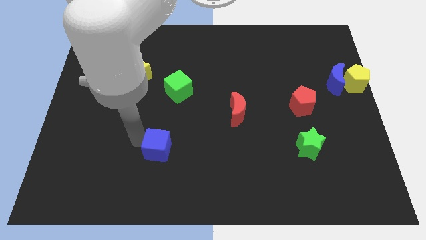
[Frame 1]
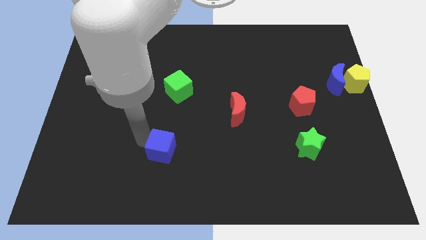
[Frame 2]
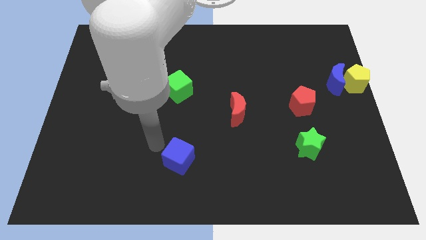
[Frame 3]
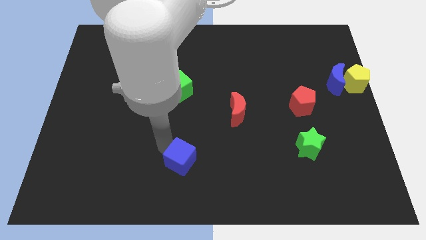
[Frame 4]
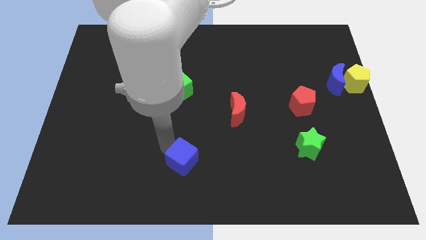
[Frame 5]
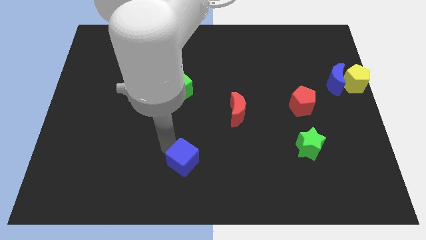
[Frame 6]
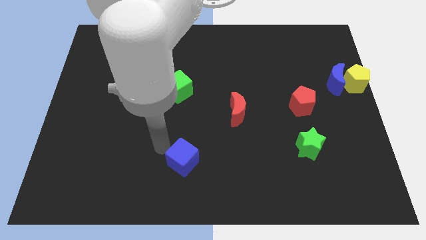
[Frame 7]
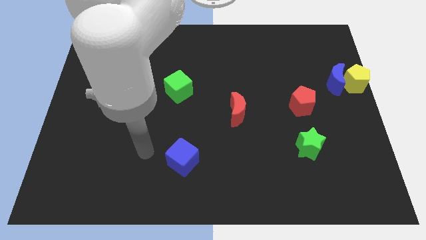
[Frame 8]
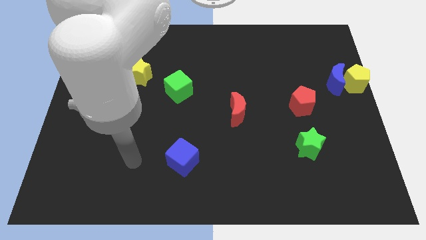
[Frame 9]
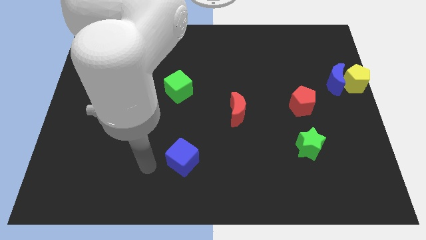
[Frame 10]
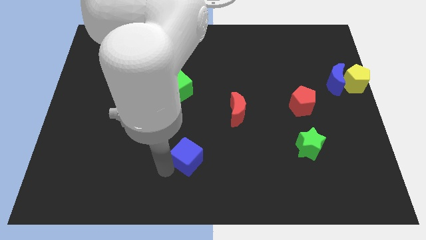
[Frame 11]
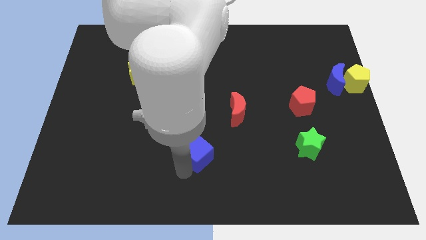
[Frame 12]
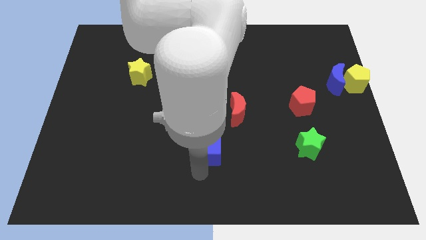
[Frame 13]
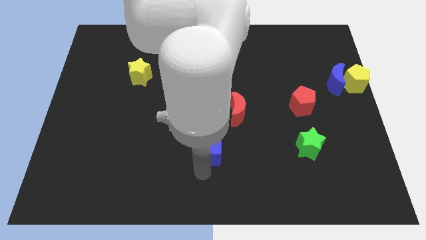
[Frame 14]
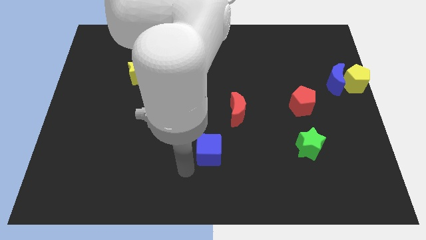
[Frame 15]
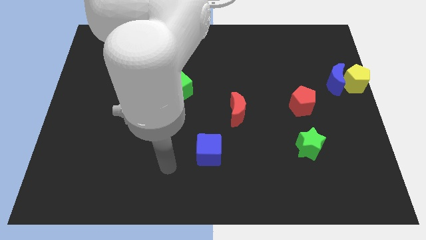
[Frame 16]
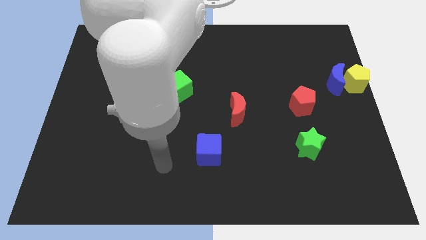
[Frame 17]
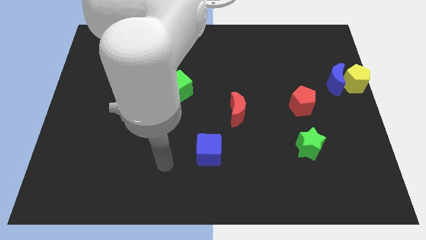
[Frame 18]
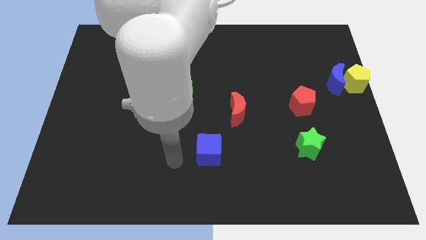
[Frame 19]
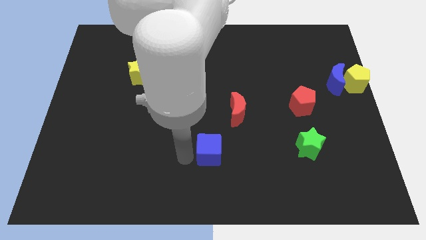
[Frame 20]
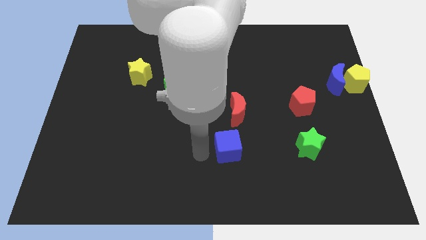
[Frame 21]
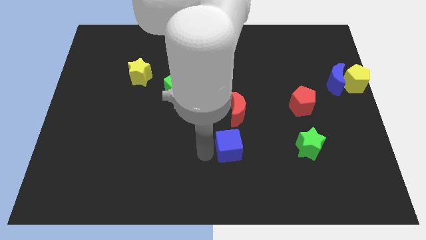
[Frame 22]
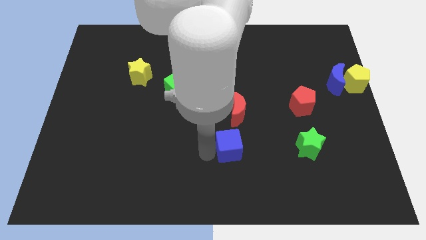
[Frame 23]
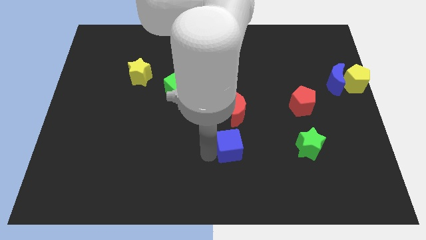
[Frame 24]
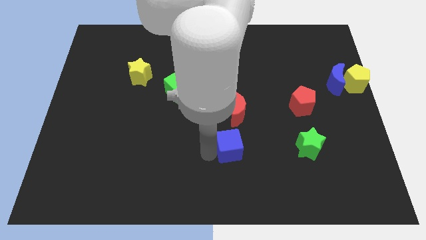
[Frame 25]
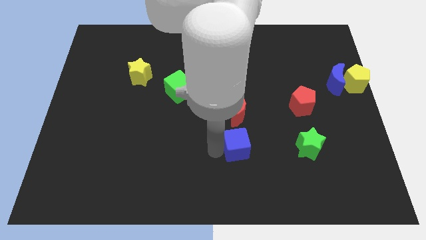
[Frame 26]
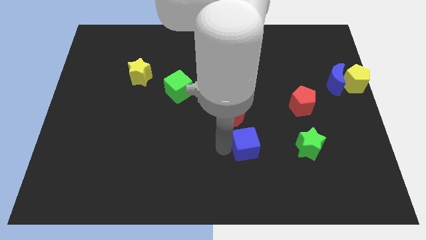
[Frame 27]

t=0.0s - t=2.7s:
push blue cube below red crescent

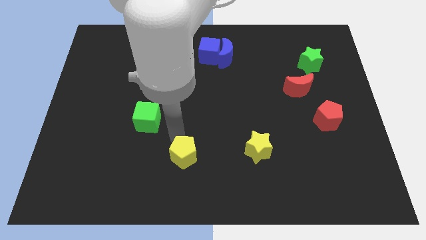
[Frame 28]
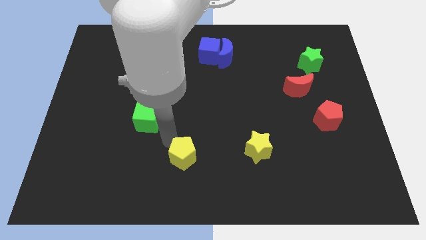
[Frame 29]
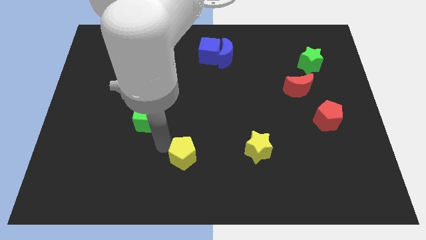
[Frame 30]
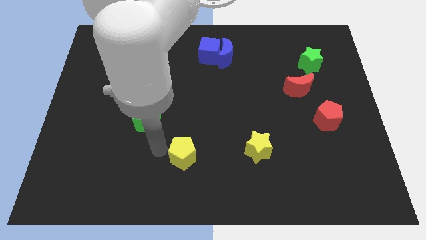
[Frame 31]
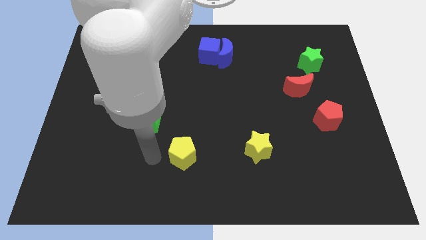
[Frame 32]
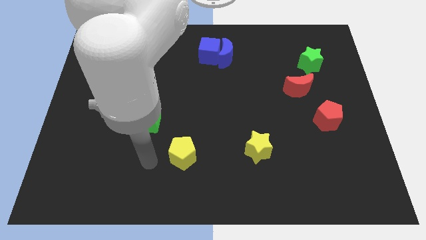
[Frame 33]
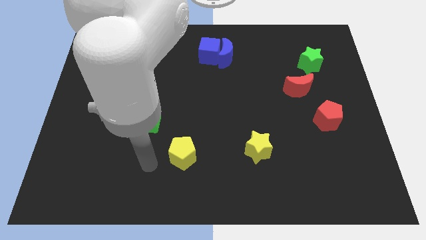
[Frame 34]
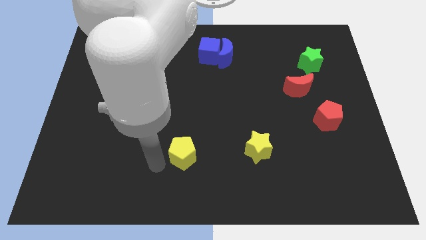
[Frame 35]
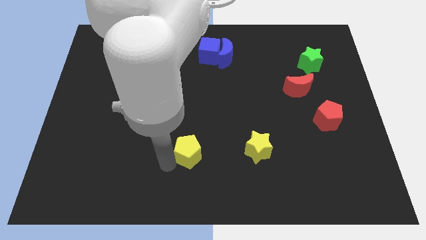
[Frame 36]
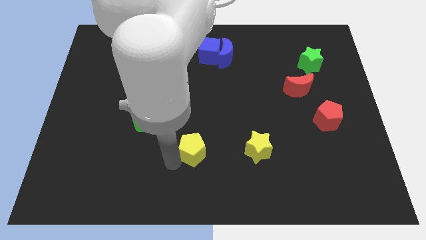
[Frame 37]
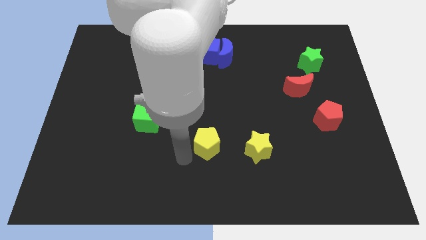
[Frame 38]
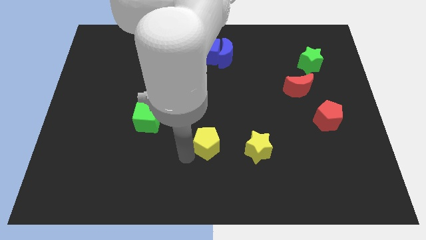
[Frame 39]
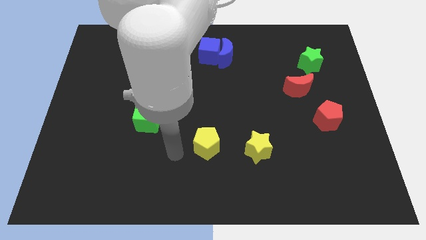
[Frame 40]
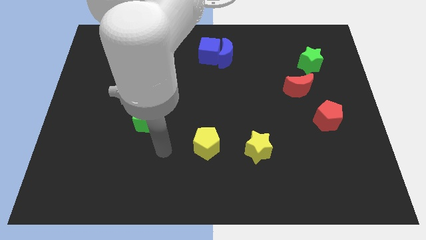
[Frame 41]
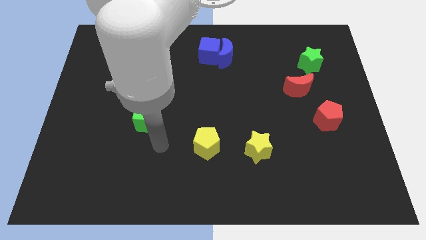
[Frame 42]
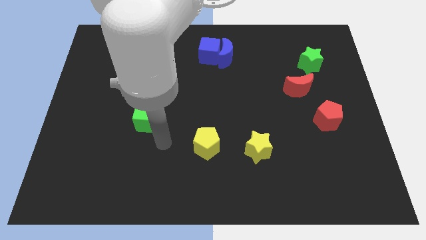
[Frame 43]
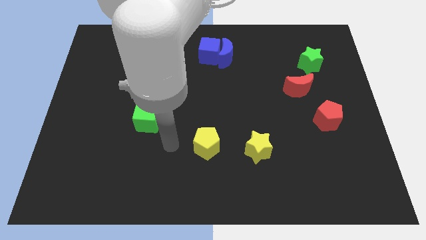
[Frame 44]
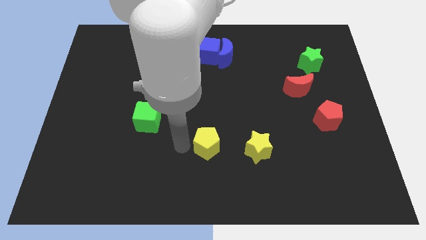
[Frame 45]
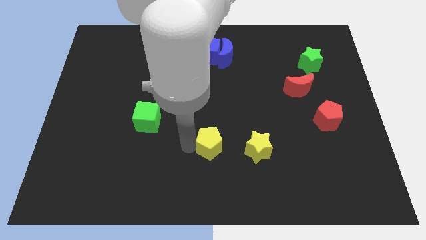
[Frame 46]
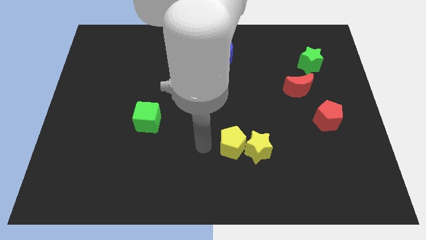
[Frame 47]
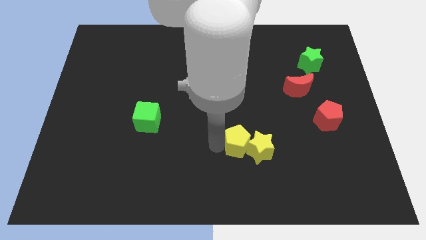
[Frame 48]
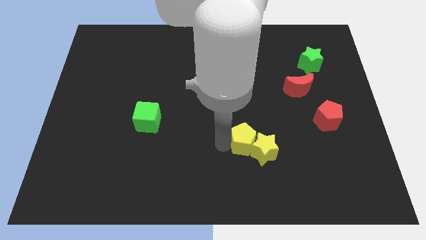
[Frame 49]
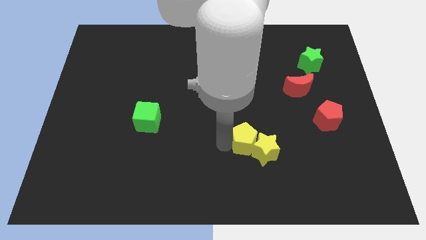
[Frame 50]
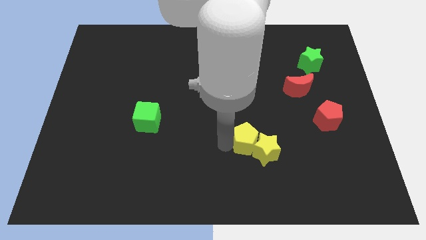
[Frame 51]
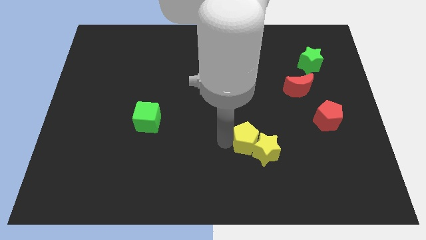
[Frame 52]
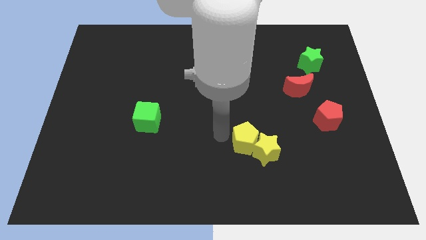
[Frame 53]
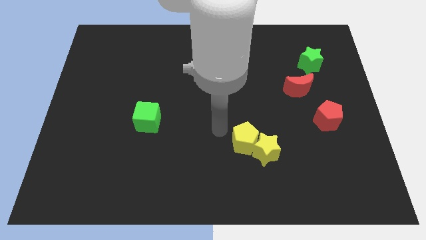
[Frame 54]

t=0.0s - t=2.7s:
push the yellow pentagon into the yellow star

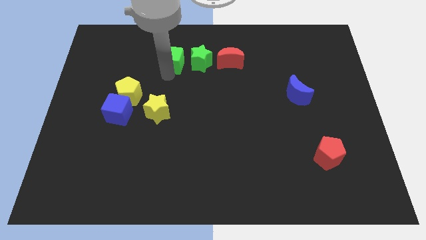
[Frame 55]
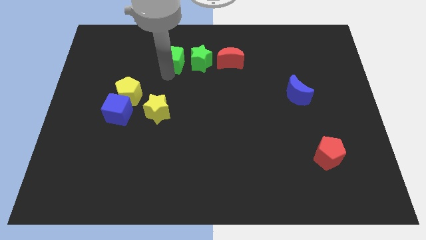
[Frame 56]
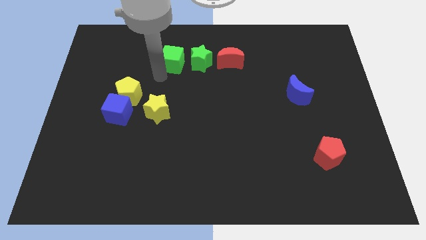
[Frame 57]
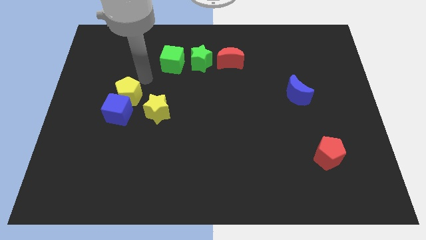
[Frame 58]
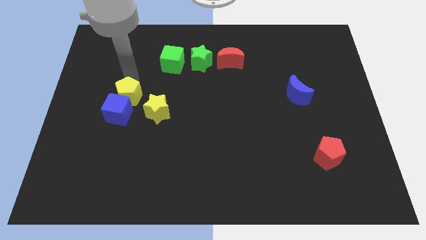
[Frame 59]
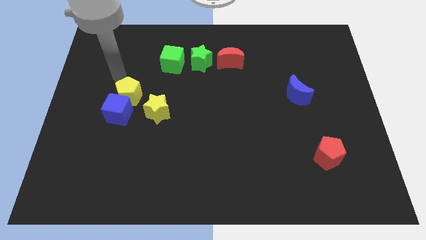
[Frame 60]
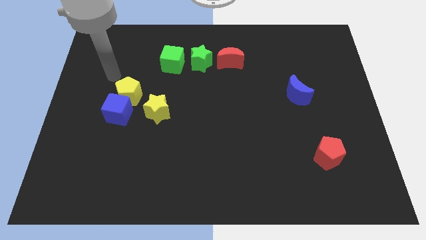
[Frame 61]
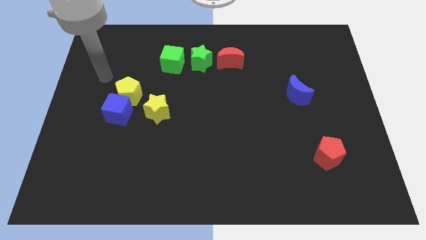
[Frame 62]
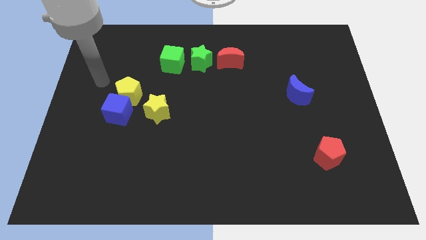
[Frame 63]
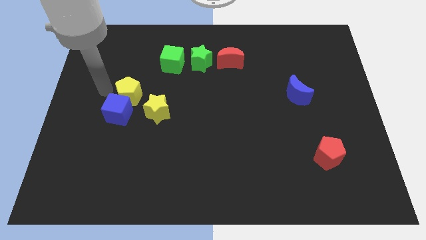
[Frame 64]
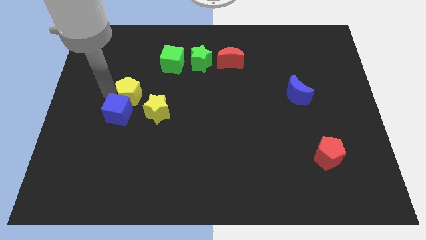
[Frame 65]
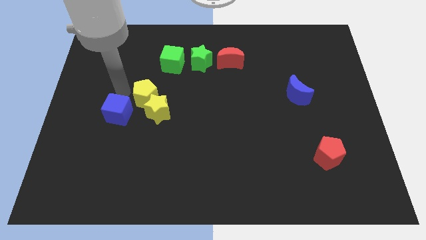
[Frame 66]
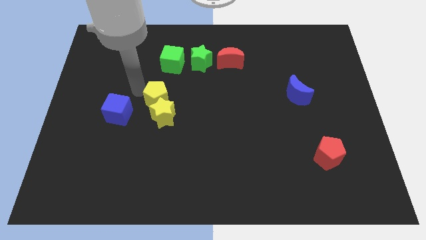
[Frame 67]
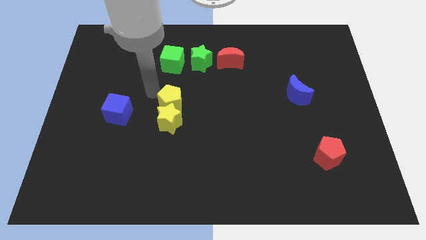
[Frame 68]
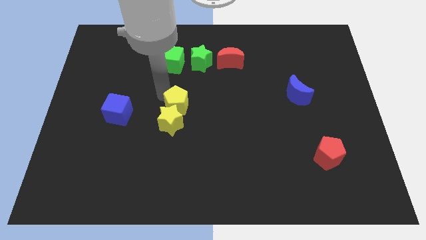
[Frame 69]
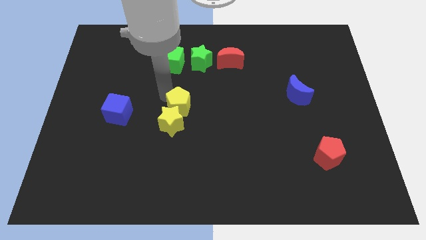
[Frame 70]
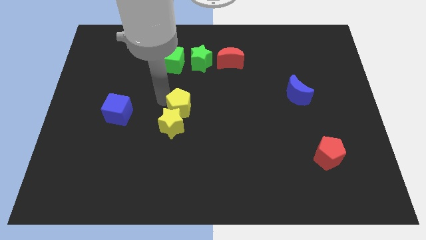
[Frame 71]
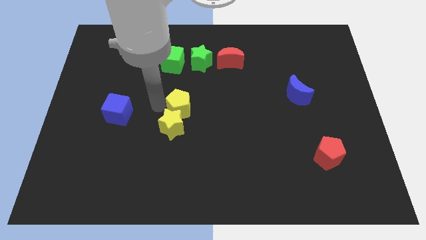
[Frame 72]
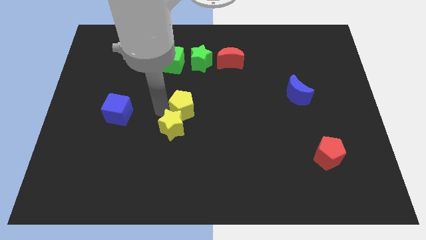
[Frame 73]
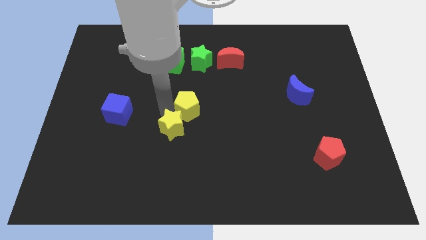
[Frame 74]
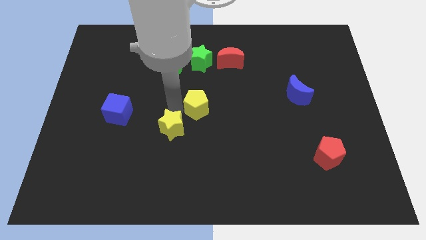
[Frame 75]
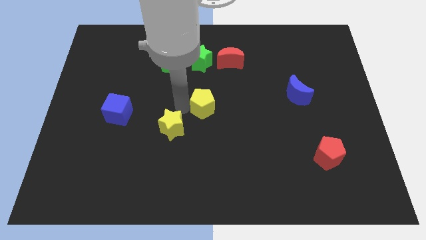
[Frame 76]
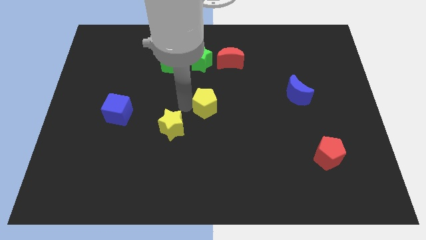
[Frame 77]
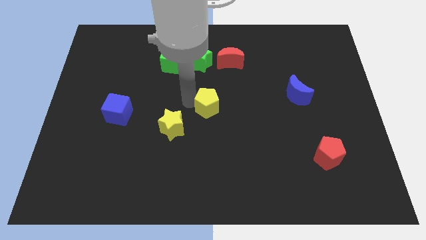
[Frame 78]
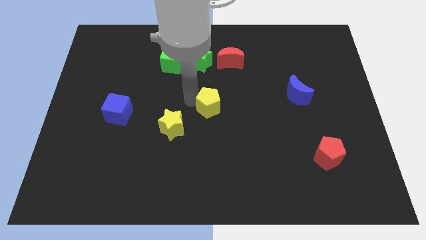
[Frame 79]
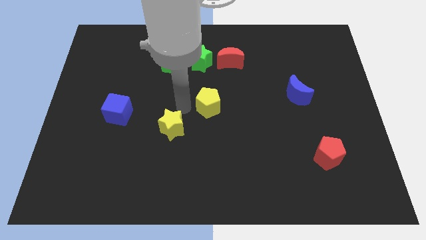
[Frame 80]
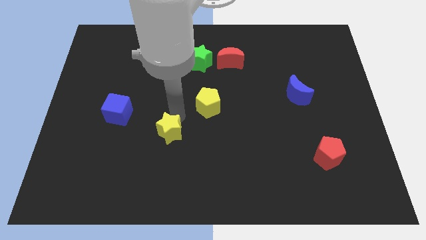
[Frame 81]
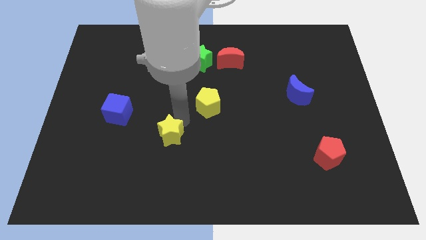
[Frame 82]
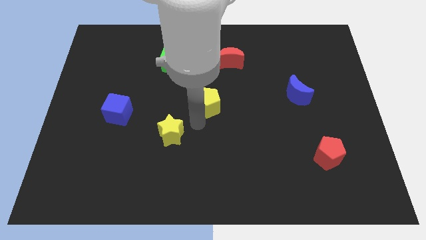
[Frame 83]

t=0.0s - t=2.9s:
place yellow pentagon below the green star

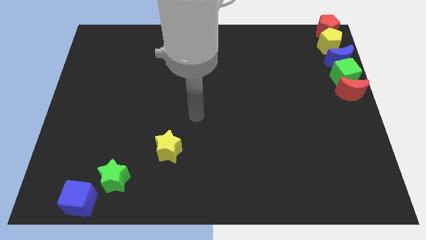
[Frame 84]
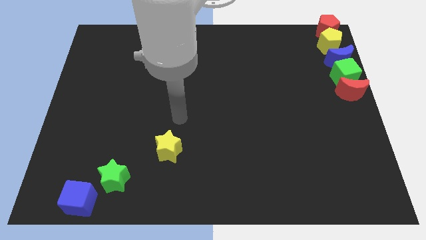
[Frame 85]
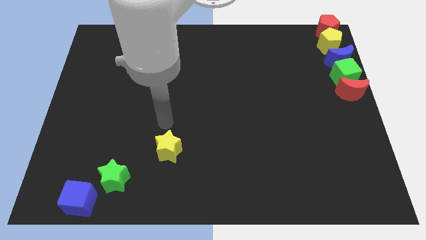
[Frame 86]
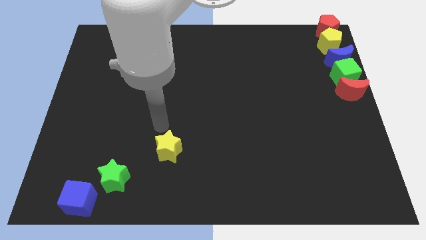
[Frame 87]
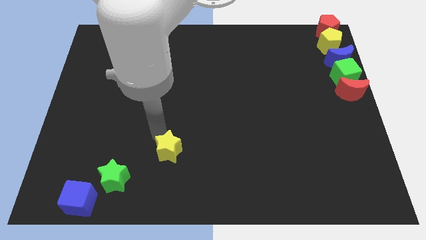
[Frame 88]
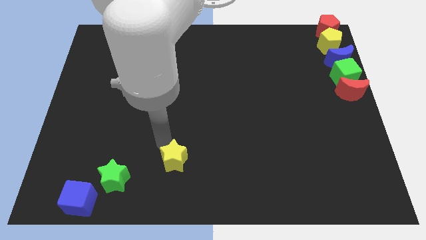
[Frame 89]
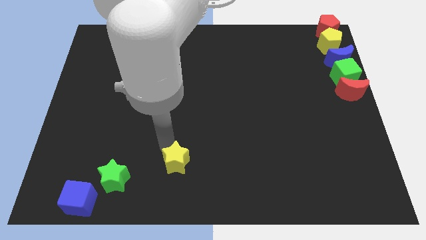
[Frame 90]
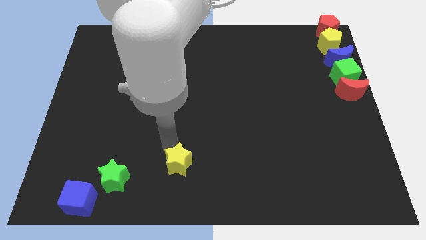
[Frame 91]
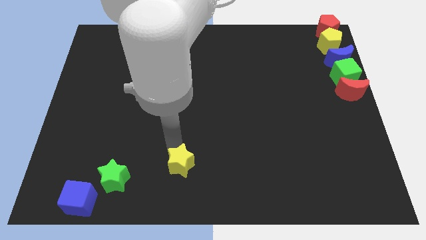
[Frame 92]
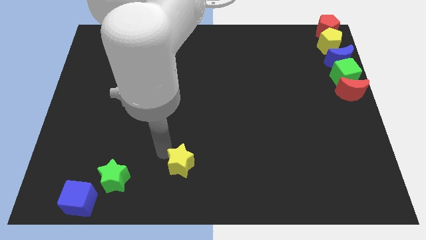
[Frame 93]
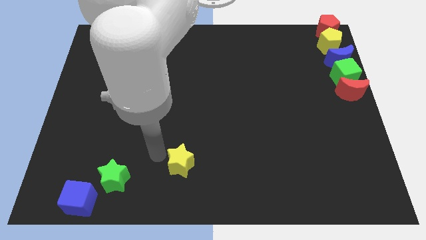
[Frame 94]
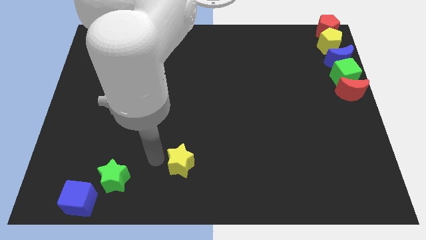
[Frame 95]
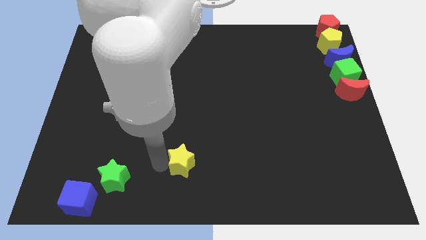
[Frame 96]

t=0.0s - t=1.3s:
push the yellow star towards the bottom side of the board
